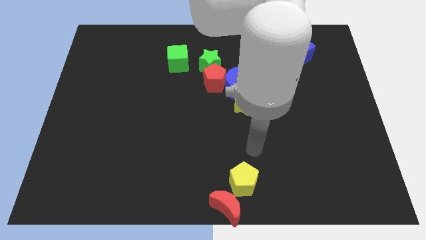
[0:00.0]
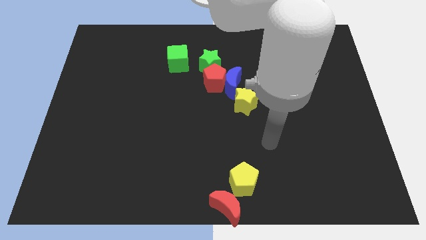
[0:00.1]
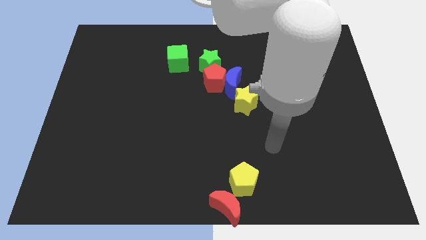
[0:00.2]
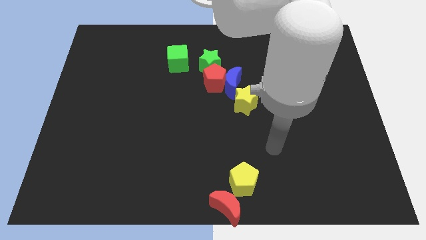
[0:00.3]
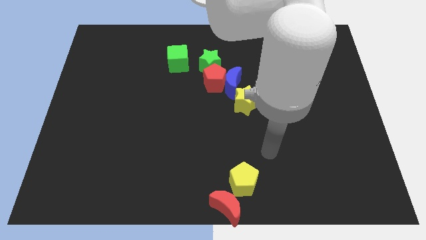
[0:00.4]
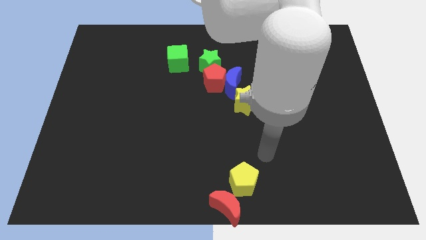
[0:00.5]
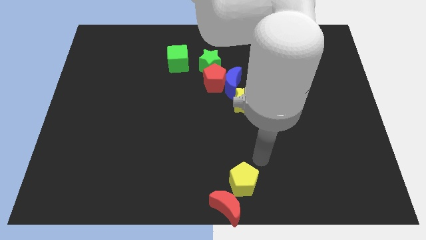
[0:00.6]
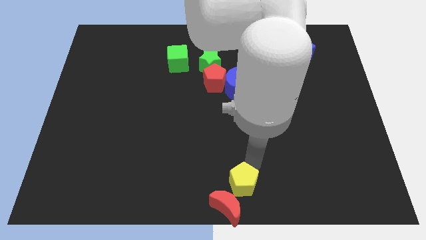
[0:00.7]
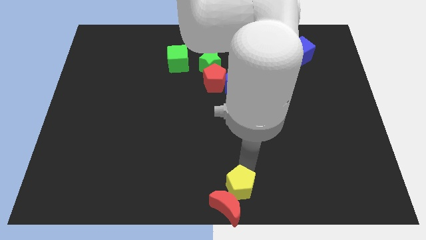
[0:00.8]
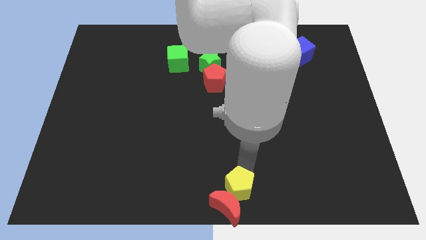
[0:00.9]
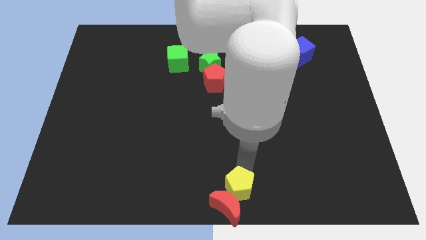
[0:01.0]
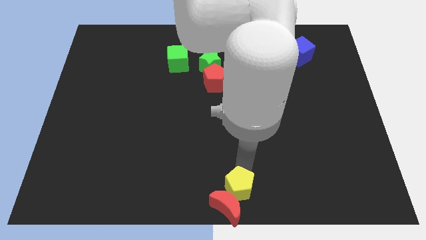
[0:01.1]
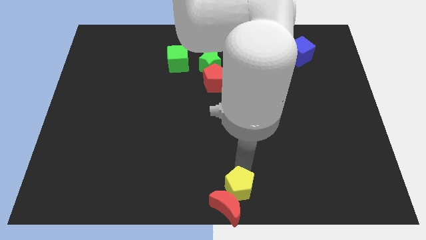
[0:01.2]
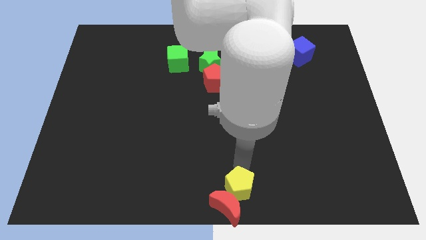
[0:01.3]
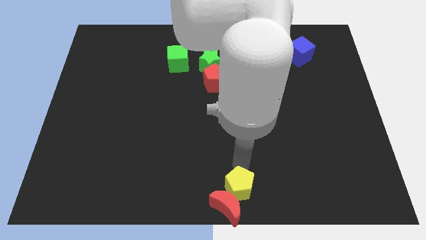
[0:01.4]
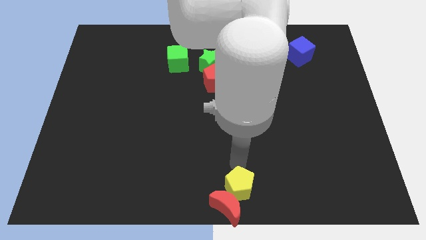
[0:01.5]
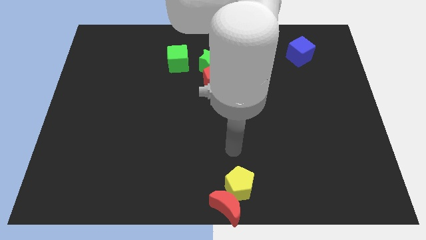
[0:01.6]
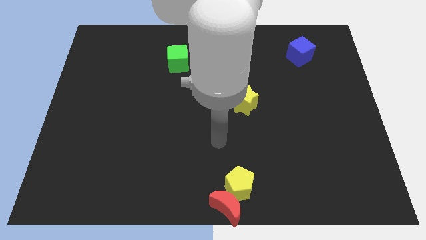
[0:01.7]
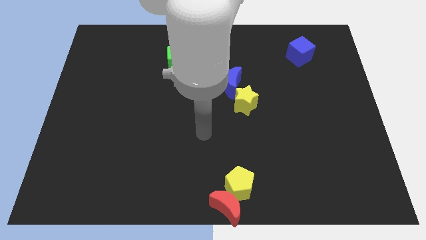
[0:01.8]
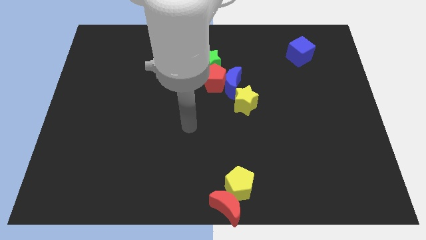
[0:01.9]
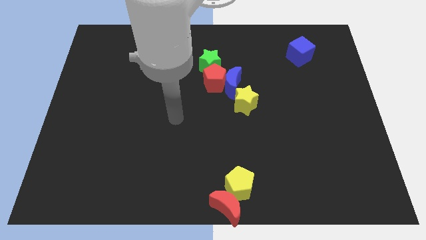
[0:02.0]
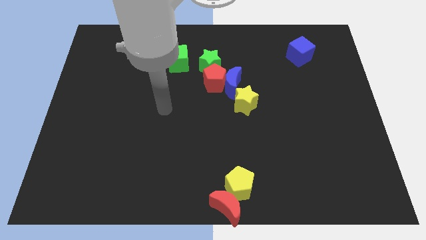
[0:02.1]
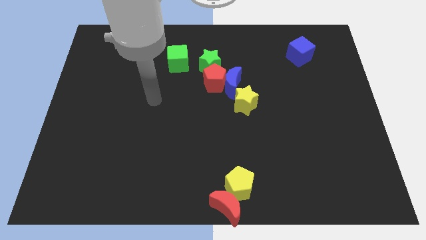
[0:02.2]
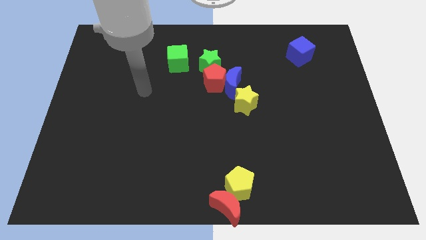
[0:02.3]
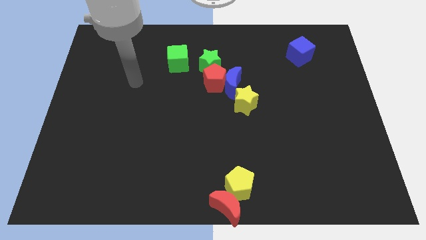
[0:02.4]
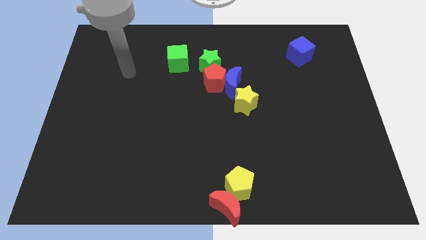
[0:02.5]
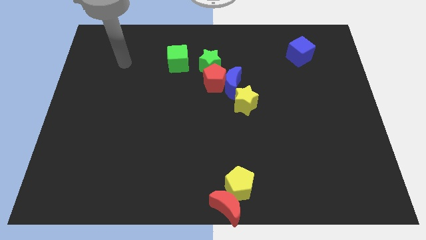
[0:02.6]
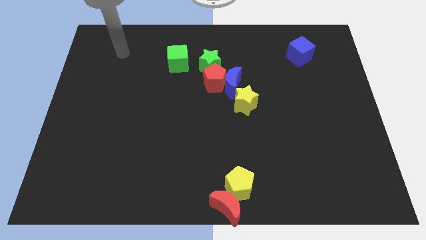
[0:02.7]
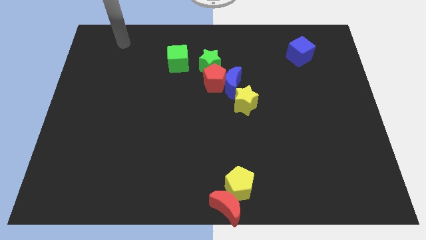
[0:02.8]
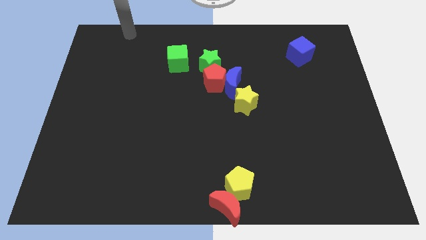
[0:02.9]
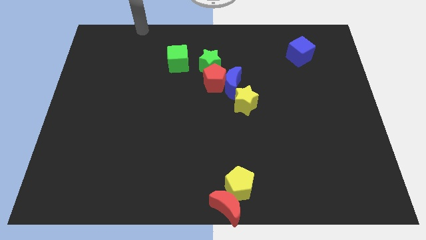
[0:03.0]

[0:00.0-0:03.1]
push the yellow pentagon to the top right side of the red moon

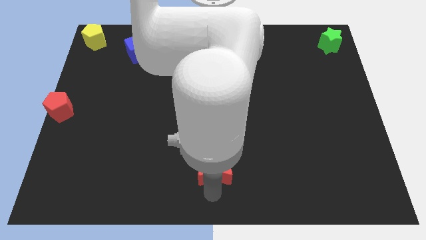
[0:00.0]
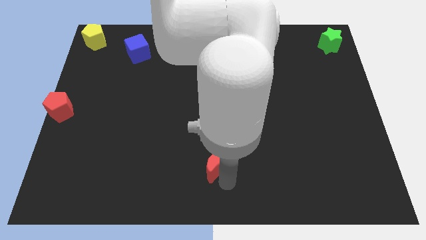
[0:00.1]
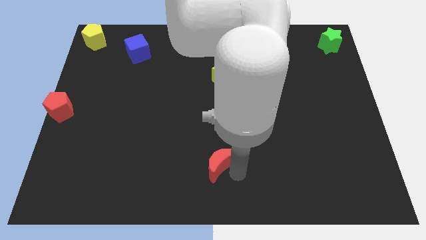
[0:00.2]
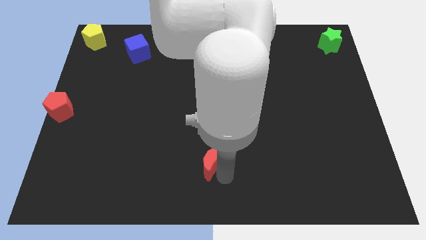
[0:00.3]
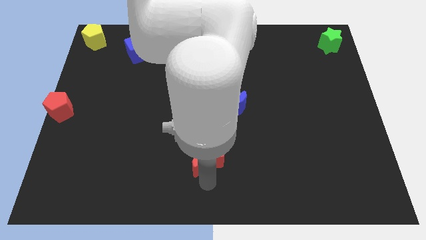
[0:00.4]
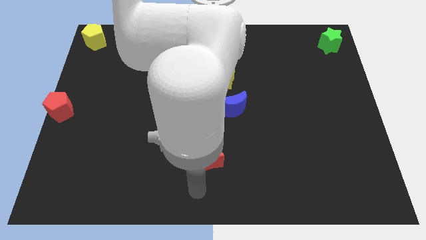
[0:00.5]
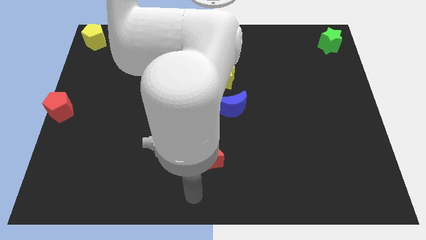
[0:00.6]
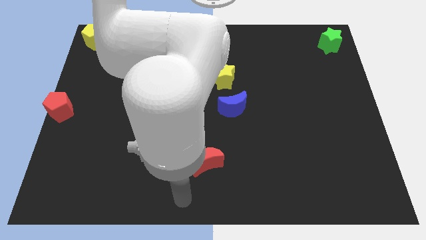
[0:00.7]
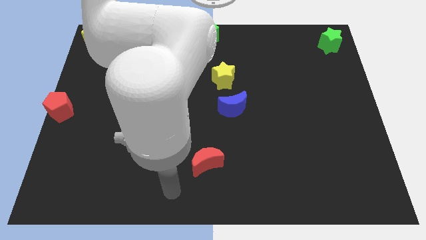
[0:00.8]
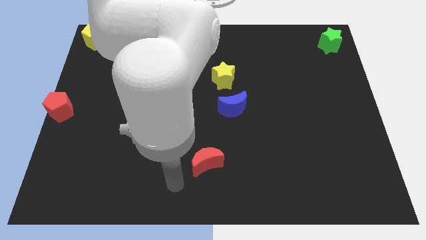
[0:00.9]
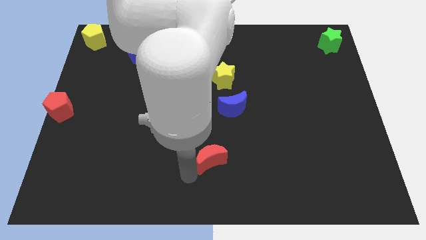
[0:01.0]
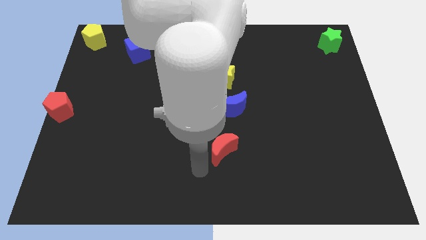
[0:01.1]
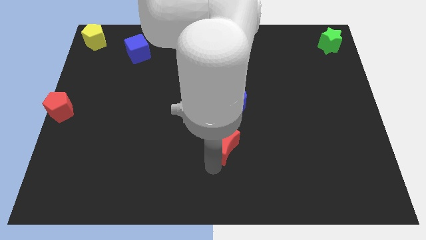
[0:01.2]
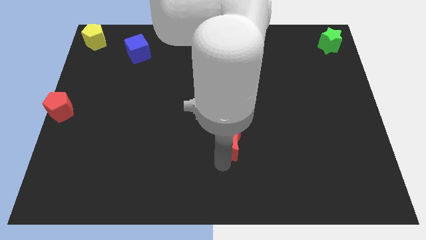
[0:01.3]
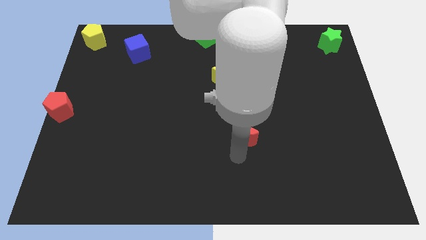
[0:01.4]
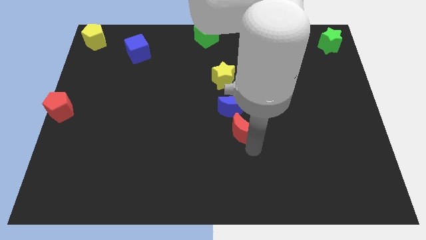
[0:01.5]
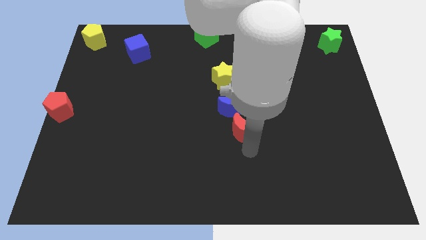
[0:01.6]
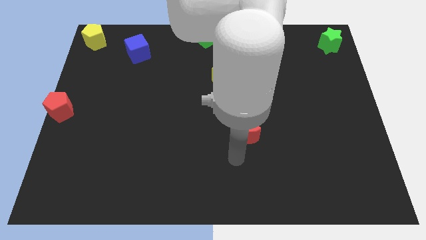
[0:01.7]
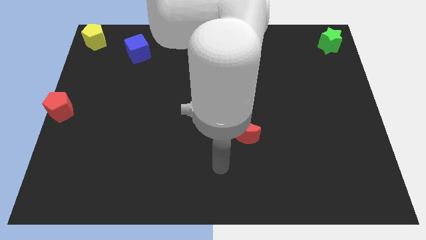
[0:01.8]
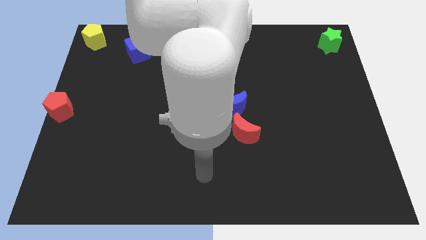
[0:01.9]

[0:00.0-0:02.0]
make the red moon to the bottom of blue crescent

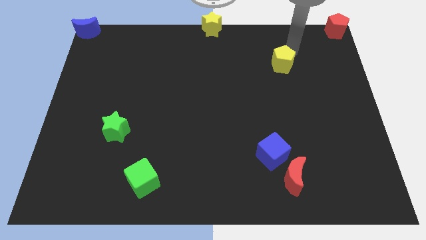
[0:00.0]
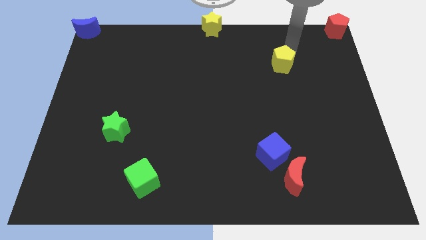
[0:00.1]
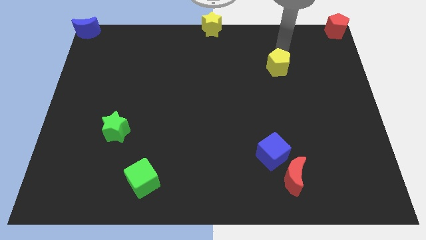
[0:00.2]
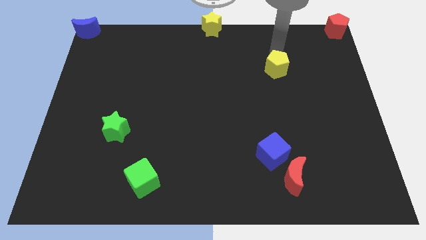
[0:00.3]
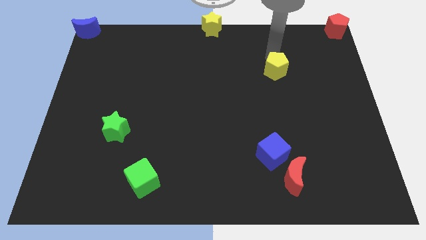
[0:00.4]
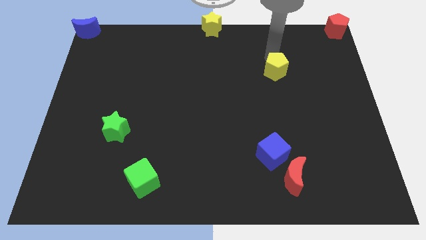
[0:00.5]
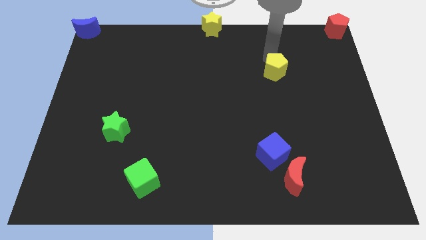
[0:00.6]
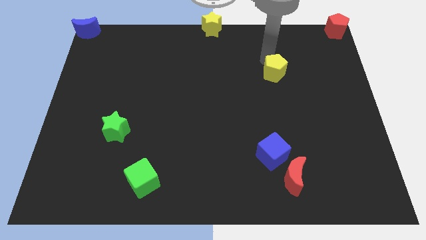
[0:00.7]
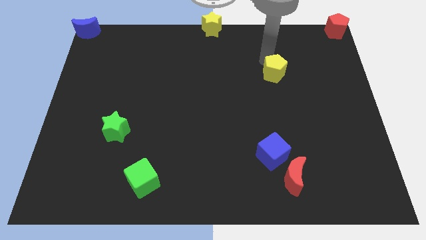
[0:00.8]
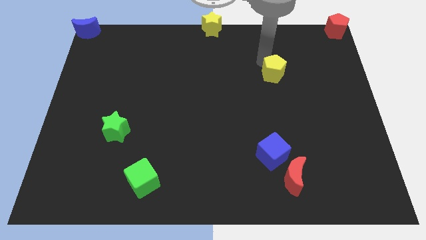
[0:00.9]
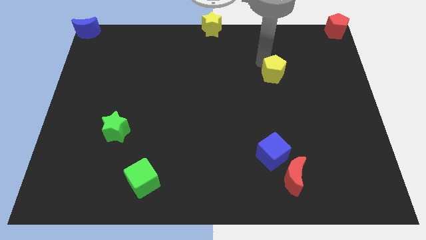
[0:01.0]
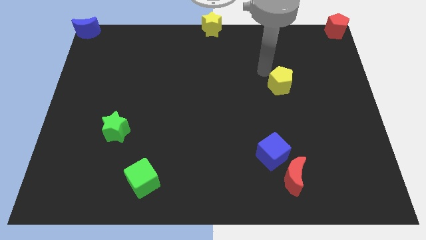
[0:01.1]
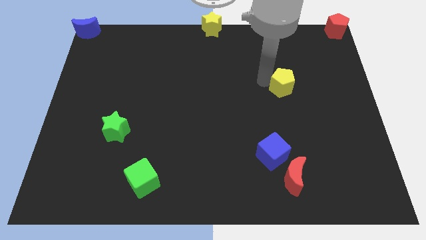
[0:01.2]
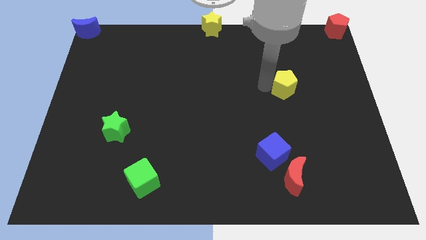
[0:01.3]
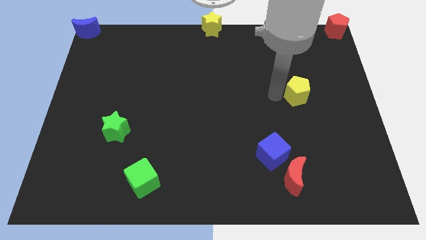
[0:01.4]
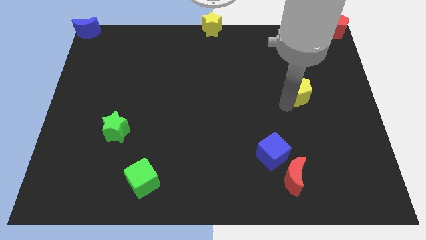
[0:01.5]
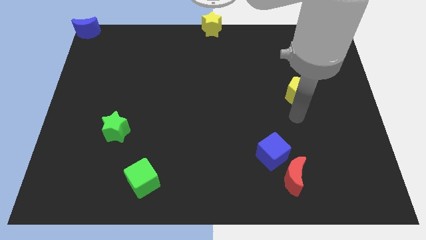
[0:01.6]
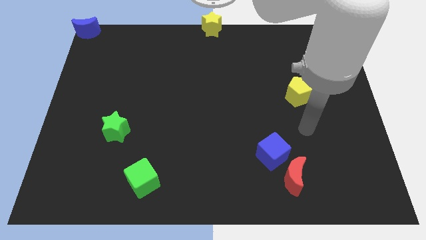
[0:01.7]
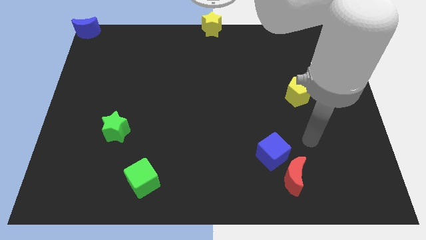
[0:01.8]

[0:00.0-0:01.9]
push the yellow pentagon to the bottom side

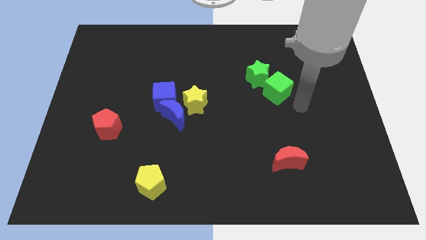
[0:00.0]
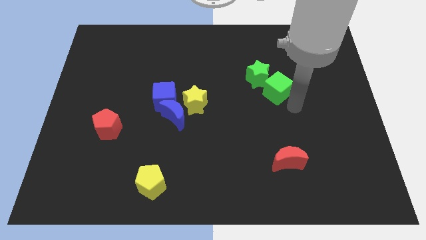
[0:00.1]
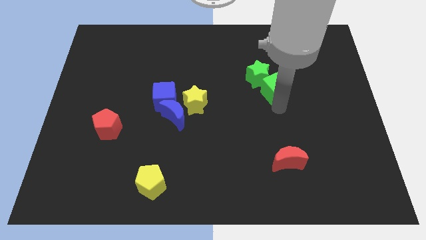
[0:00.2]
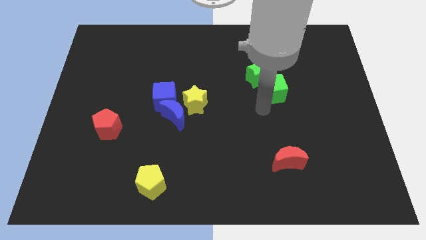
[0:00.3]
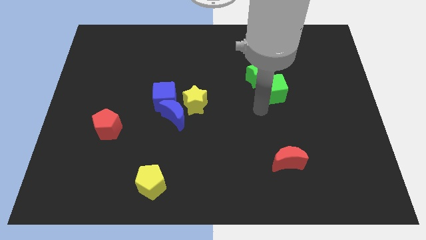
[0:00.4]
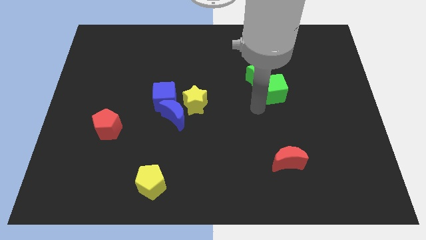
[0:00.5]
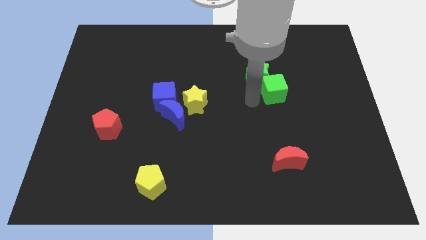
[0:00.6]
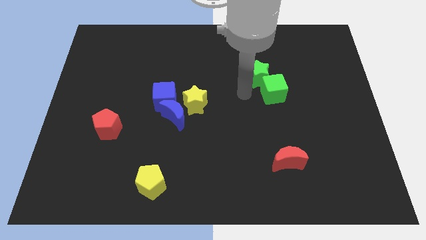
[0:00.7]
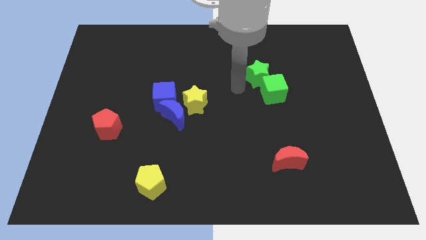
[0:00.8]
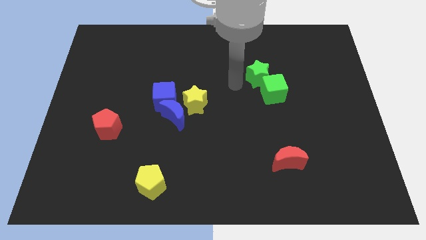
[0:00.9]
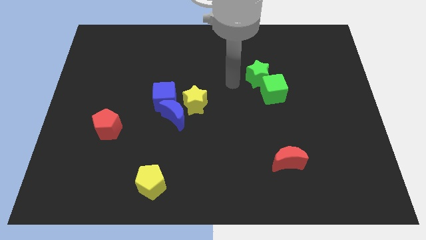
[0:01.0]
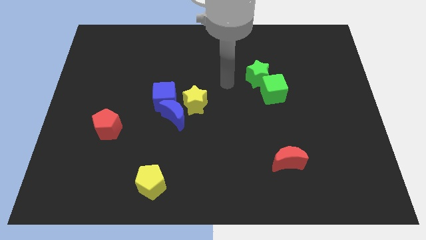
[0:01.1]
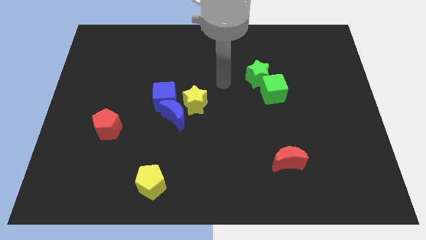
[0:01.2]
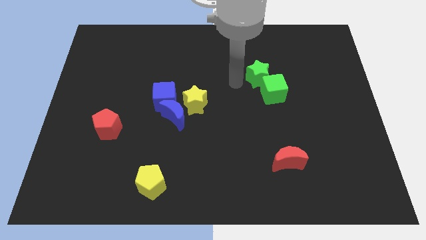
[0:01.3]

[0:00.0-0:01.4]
move your arm to the left of green star

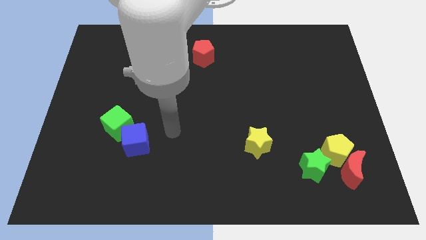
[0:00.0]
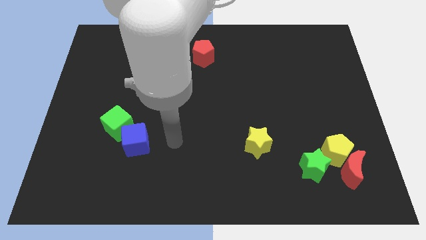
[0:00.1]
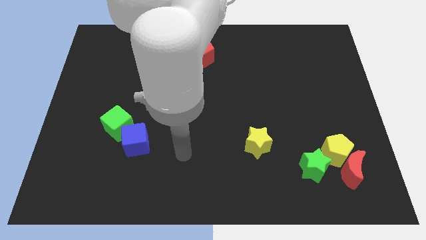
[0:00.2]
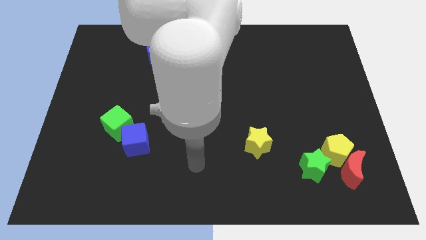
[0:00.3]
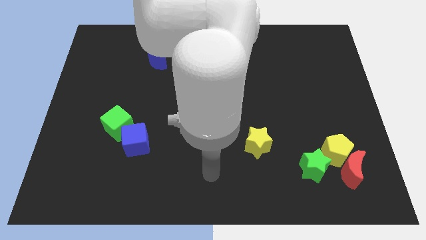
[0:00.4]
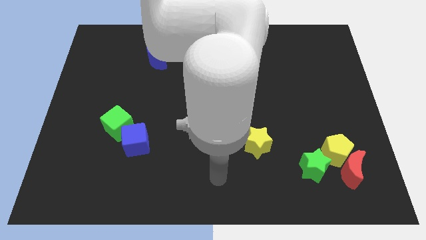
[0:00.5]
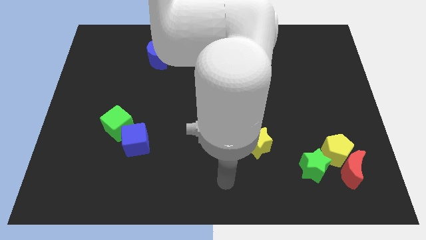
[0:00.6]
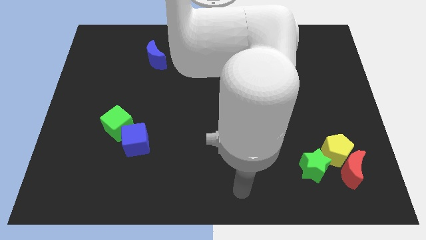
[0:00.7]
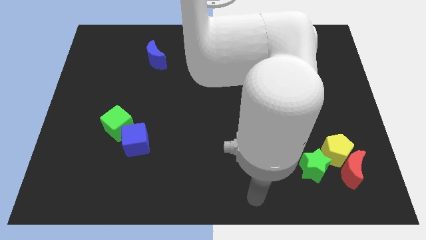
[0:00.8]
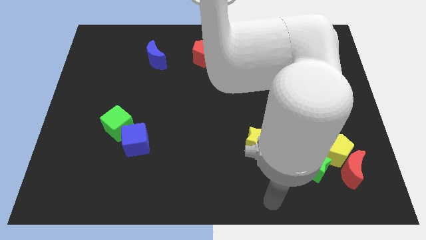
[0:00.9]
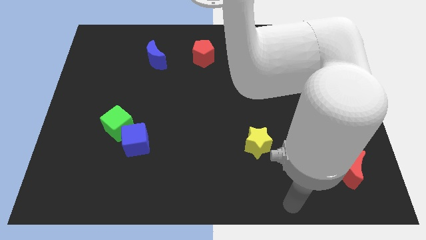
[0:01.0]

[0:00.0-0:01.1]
slide your arm towards the bottom right
